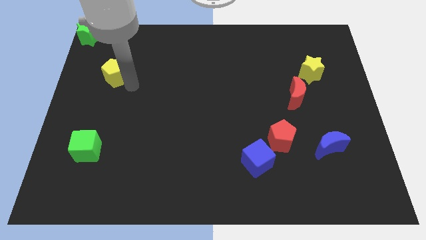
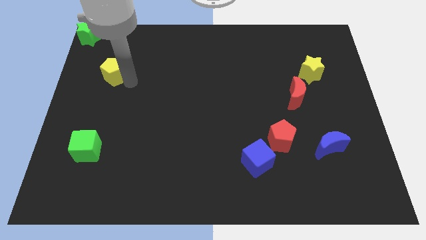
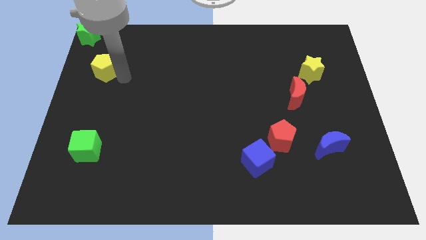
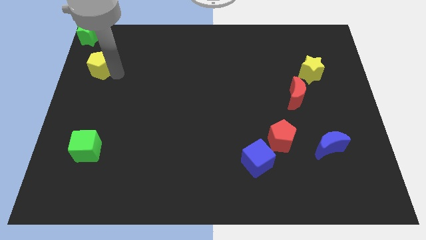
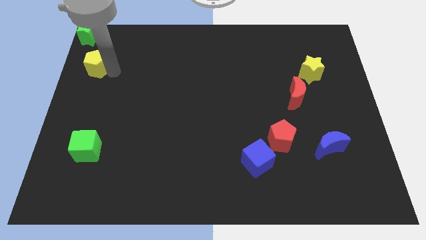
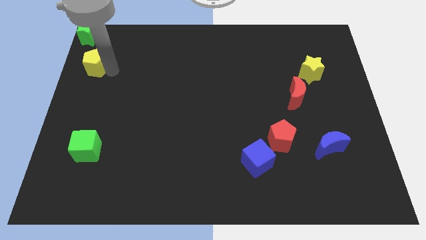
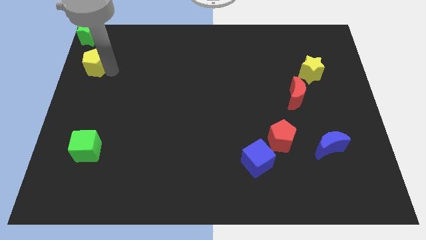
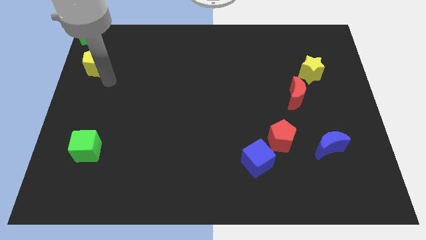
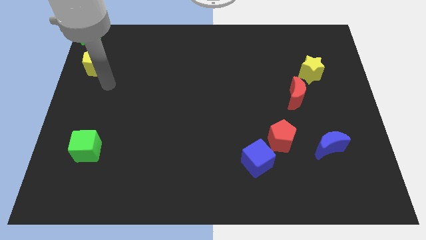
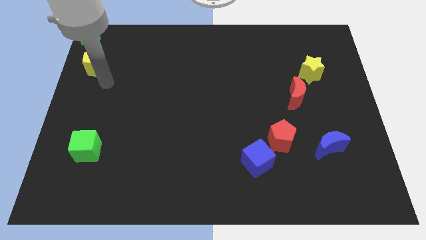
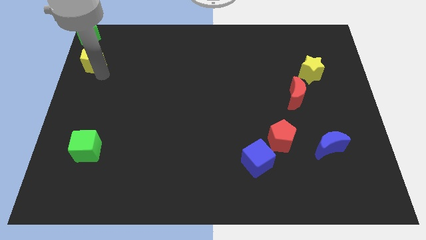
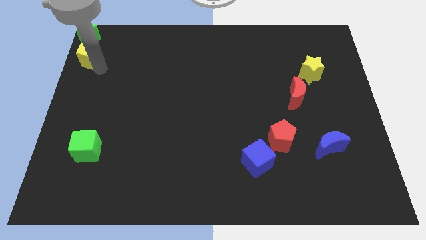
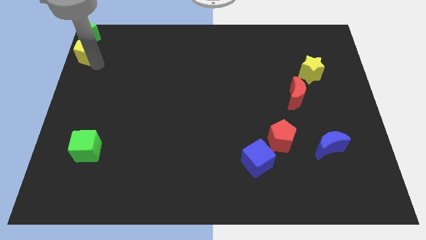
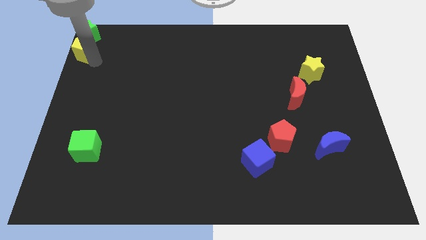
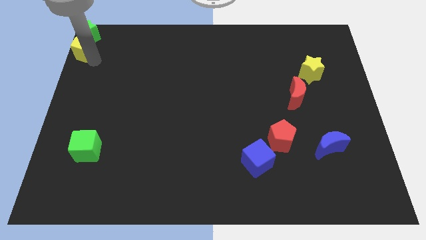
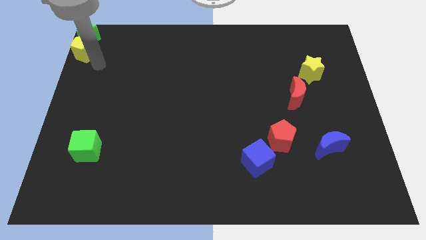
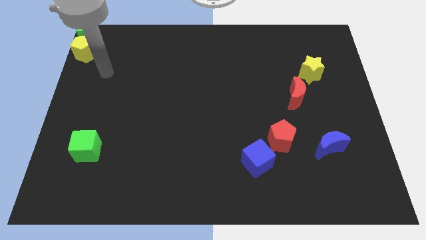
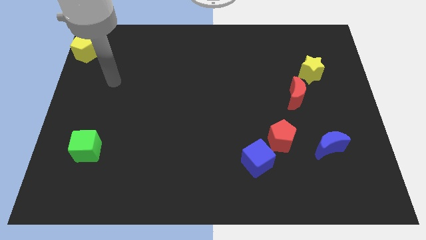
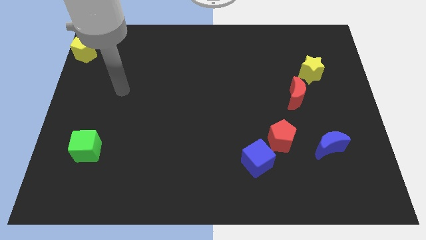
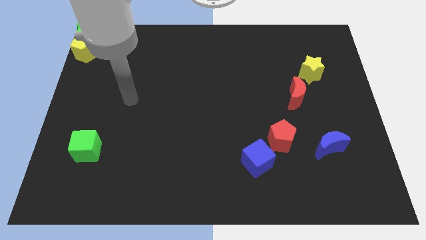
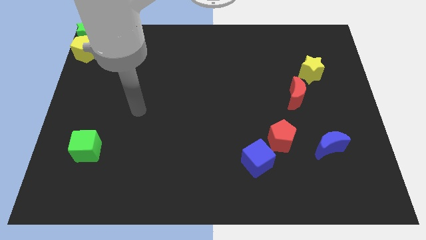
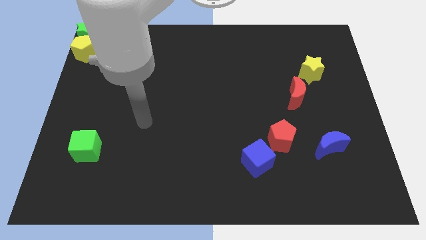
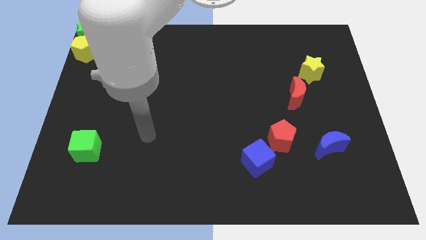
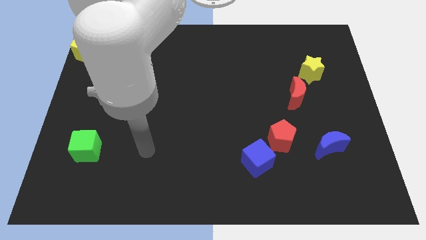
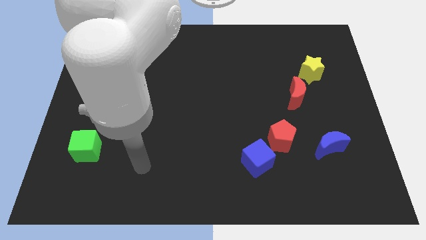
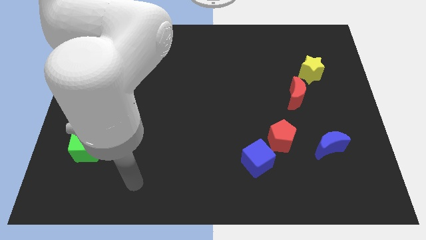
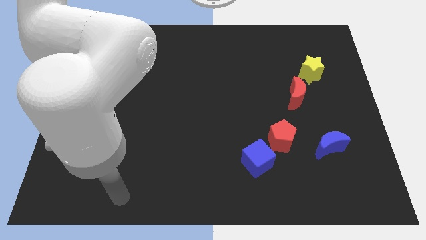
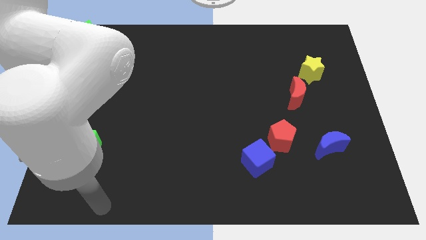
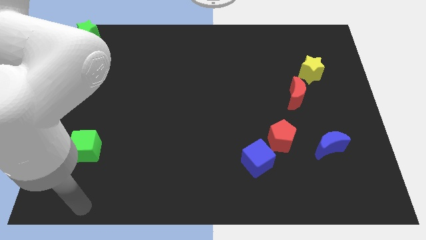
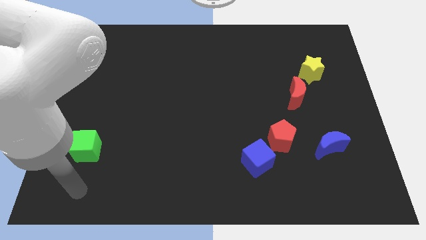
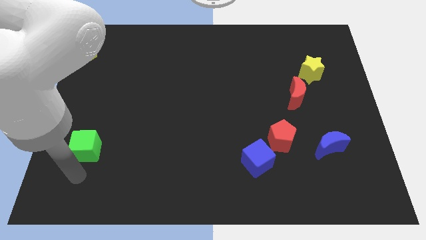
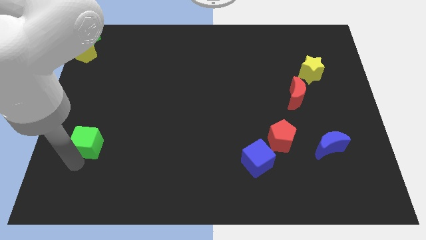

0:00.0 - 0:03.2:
move yellow pentagon into green star

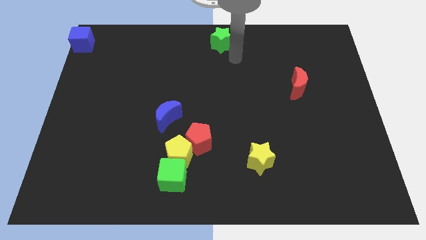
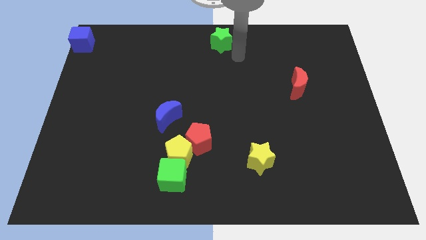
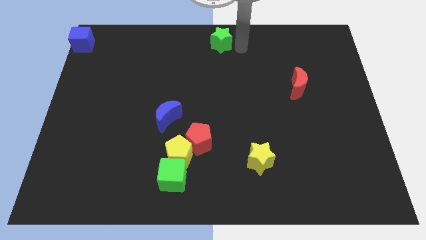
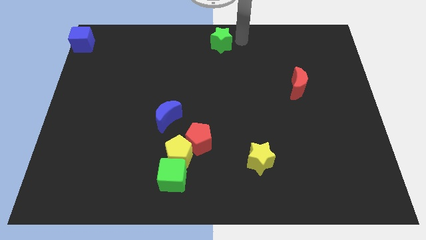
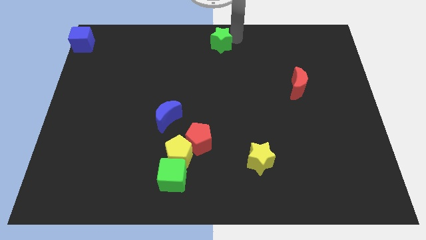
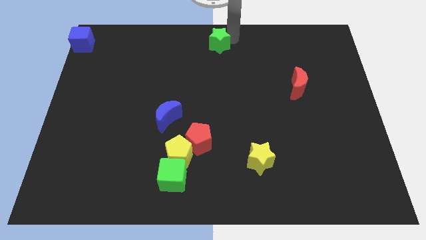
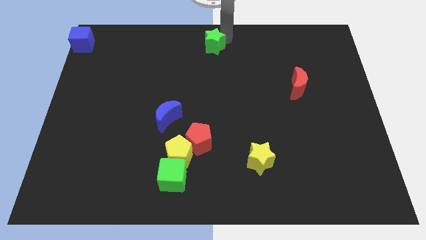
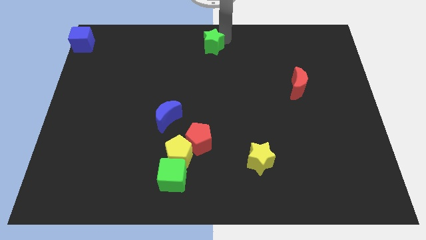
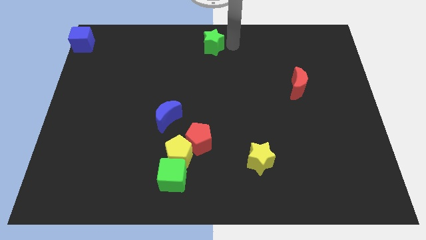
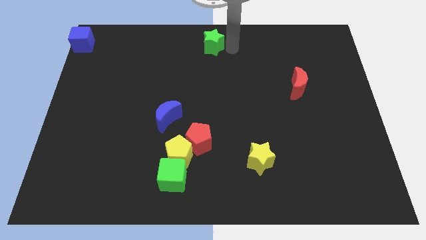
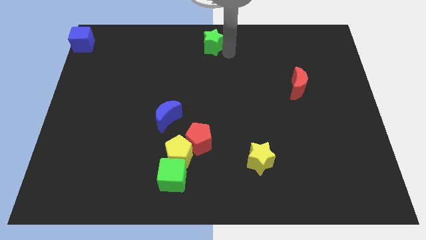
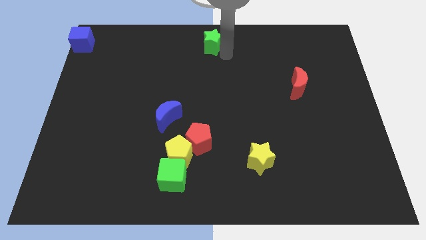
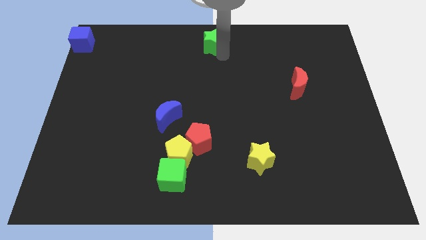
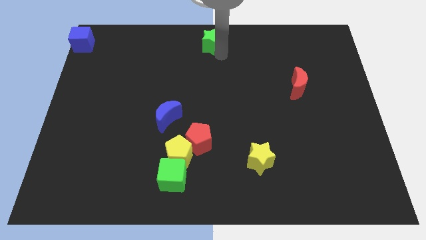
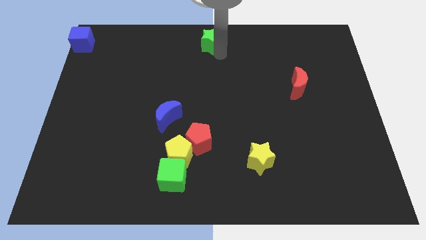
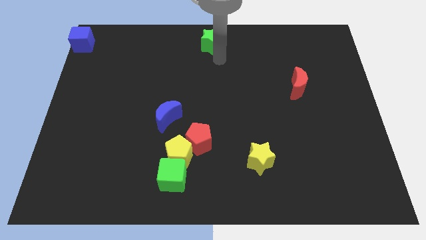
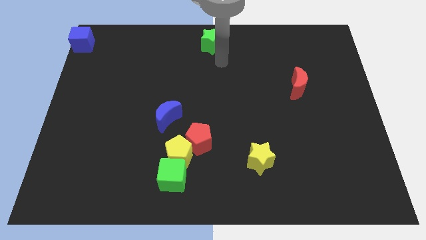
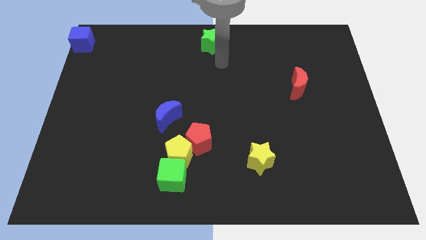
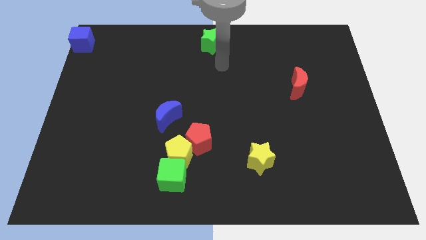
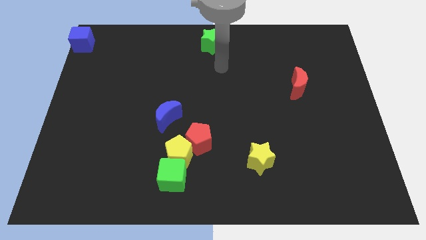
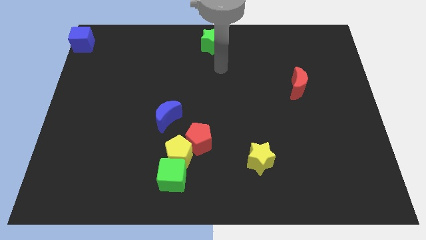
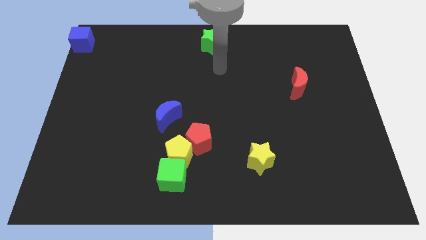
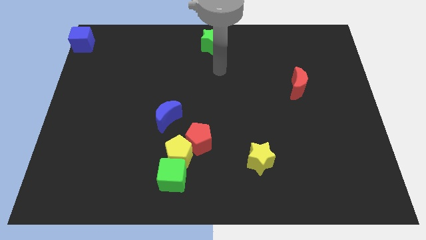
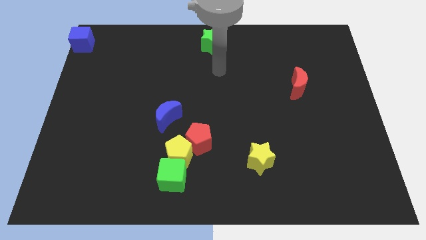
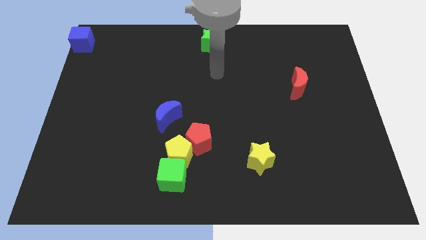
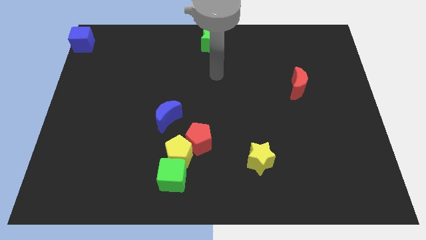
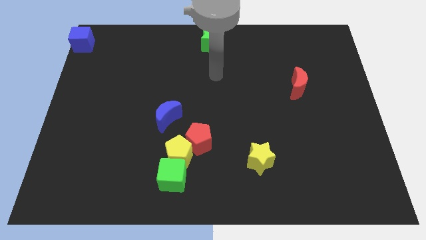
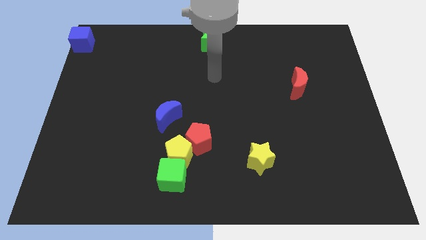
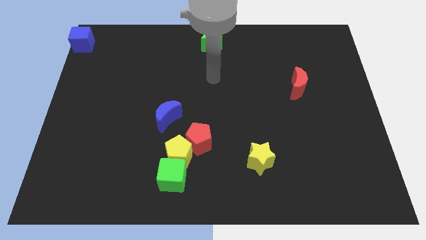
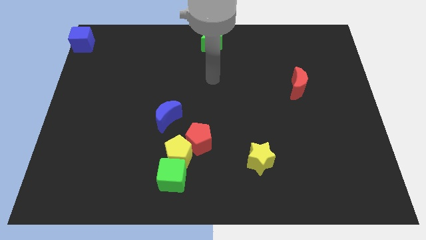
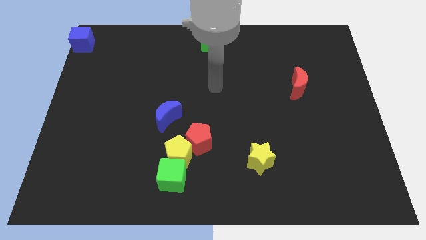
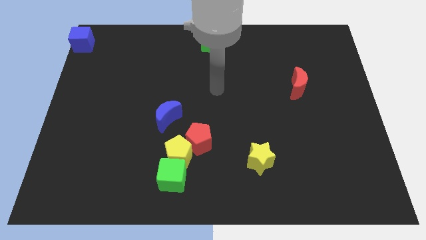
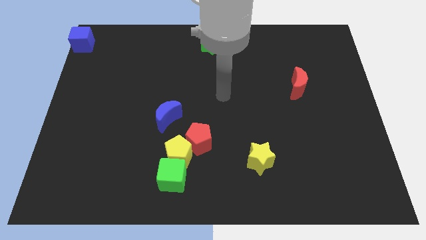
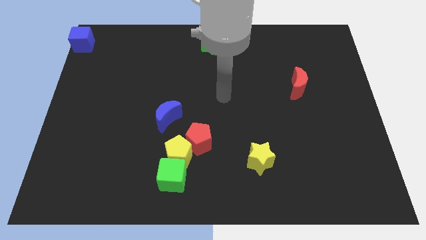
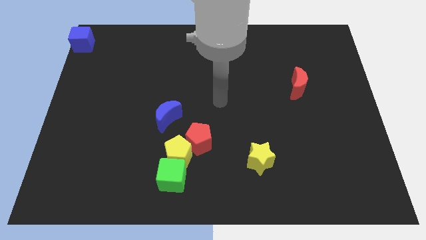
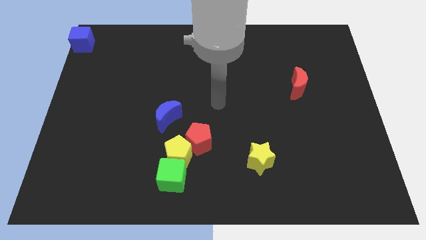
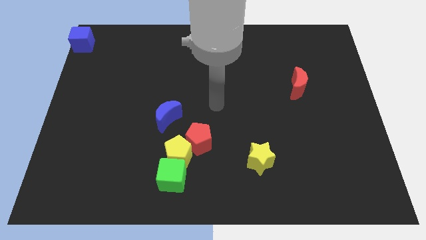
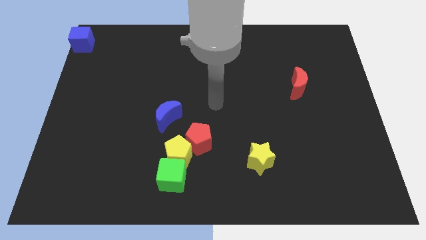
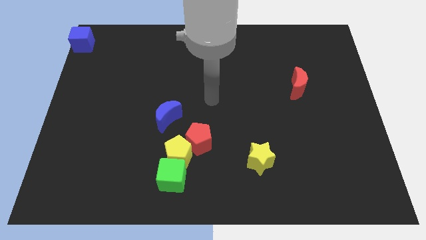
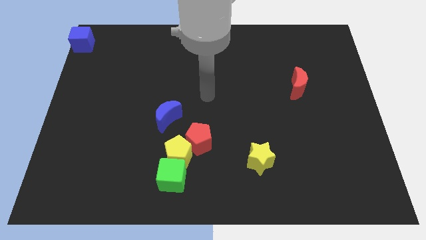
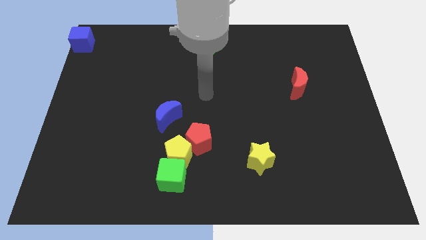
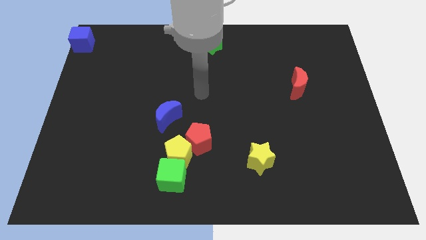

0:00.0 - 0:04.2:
move your arm away from the green star

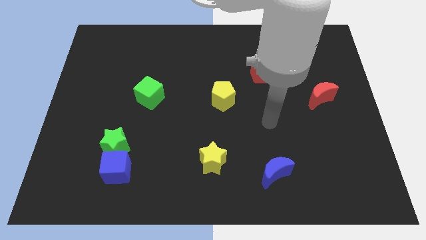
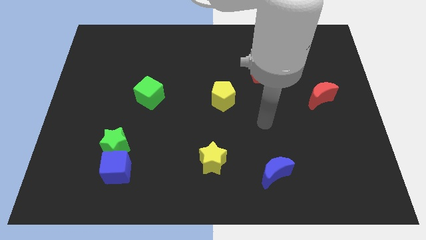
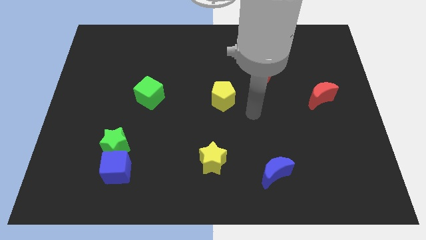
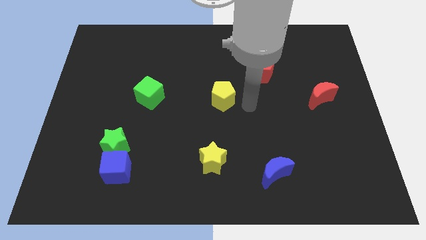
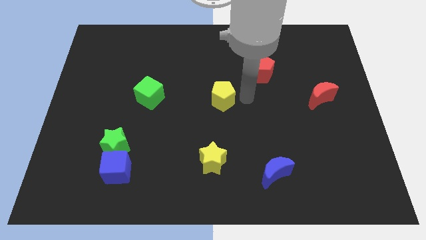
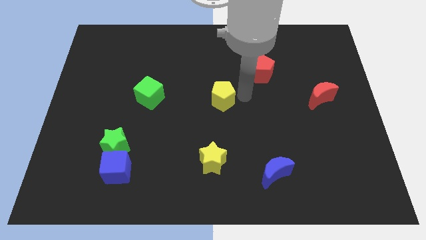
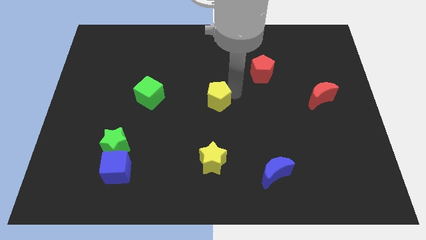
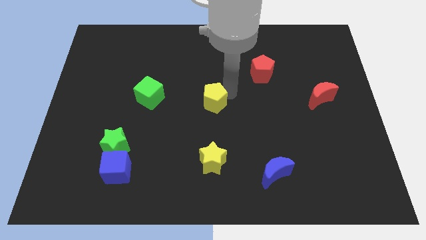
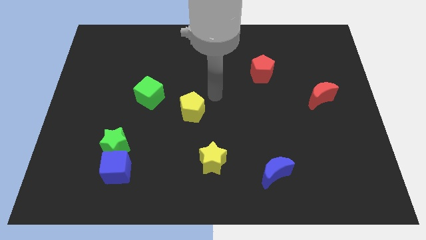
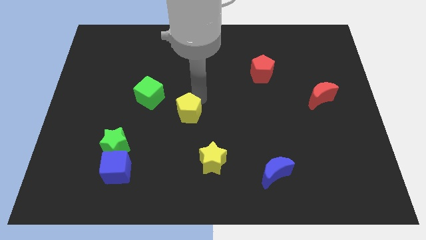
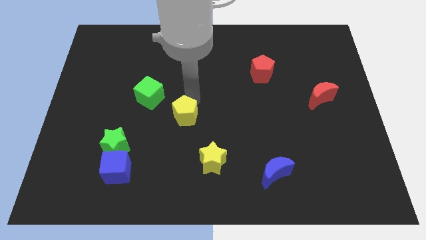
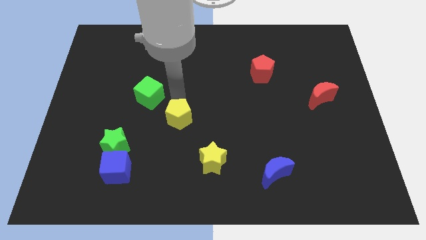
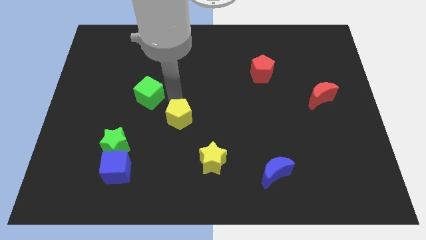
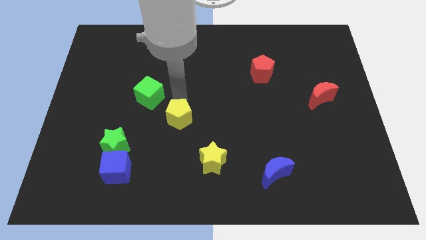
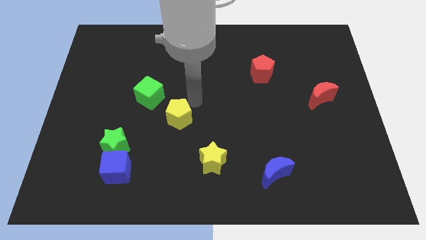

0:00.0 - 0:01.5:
place yellow pentagon to the bottom right of green cube
